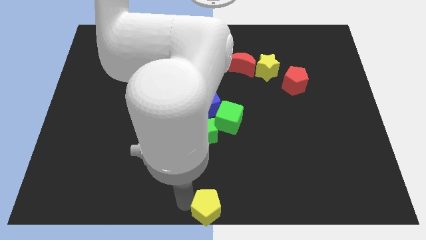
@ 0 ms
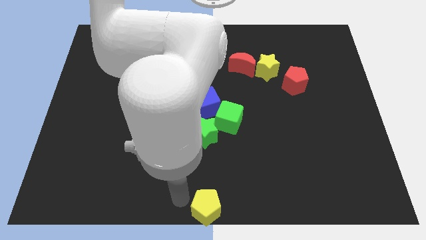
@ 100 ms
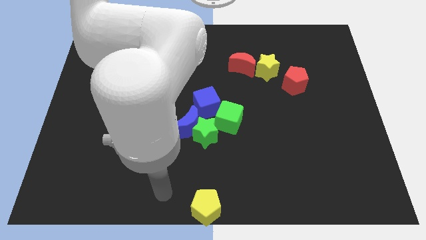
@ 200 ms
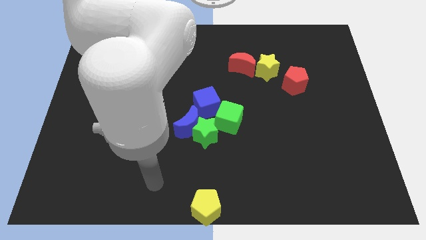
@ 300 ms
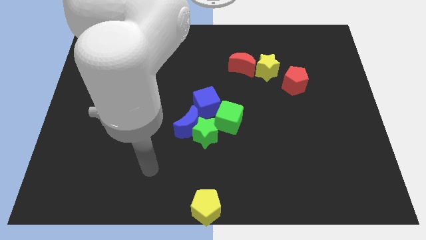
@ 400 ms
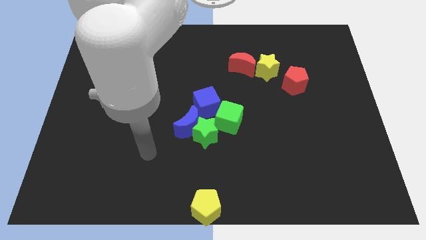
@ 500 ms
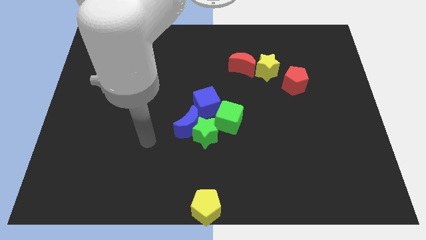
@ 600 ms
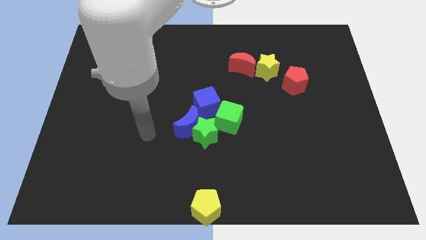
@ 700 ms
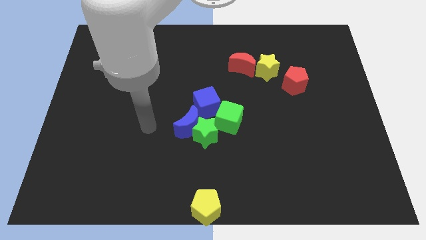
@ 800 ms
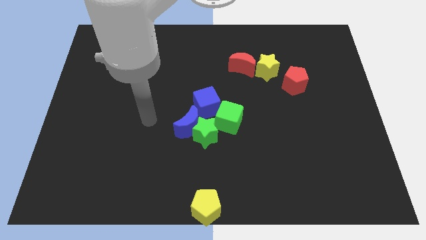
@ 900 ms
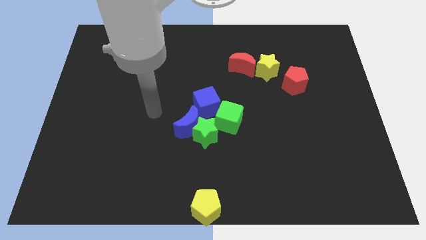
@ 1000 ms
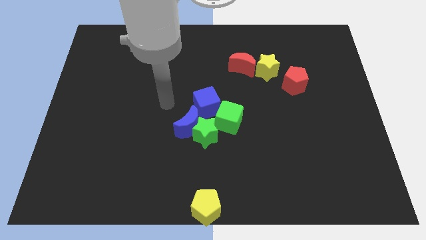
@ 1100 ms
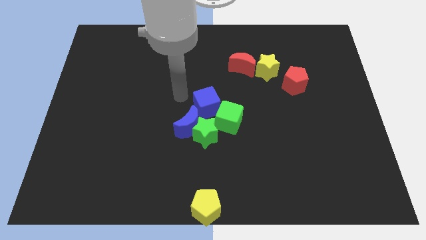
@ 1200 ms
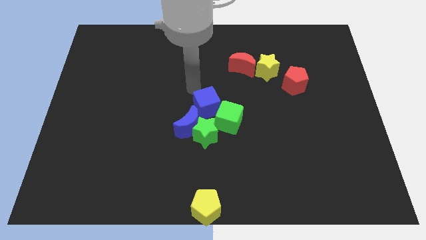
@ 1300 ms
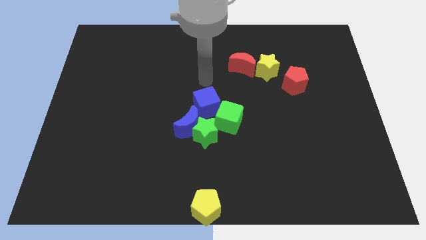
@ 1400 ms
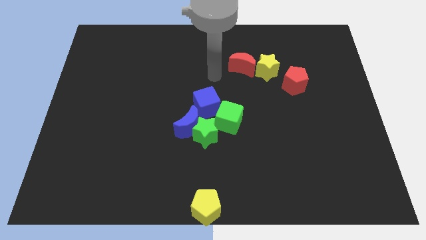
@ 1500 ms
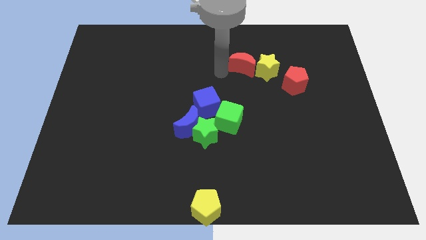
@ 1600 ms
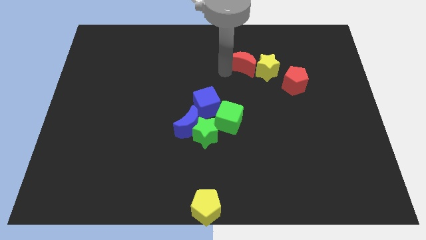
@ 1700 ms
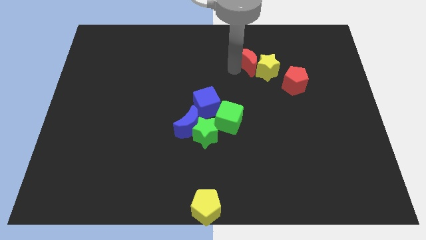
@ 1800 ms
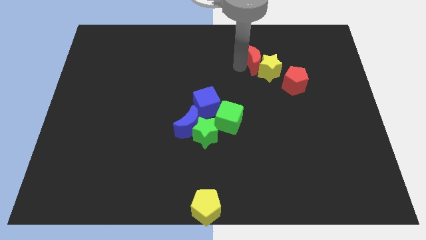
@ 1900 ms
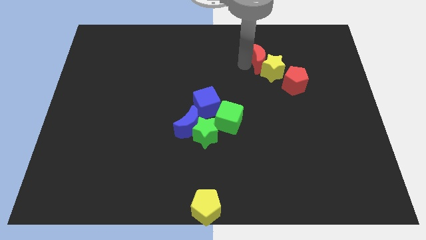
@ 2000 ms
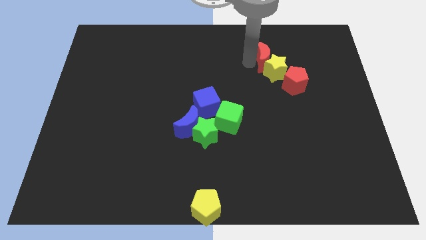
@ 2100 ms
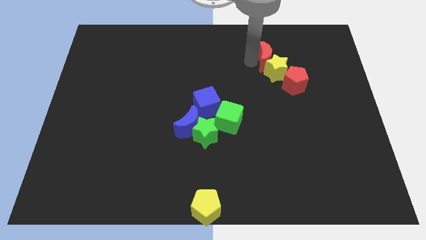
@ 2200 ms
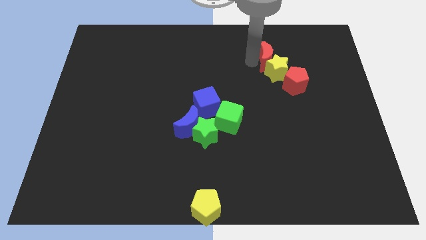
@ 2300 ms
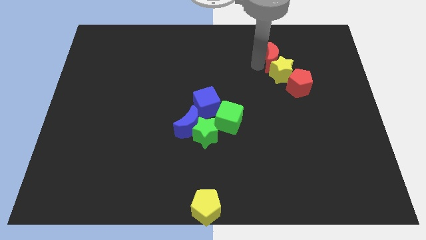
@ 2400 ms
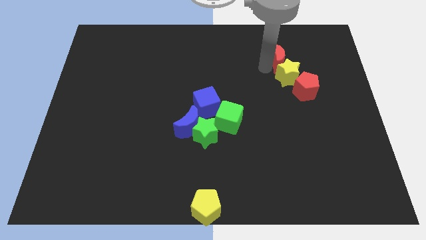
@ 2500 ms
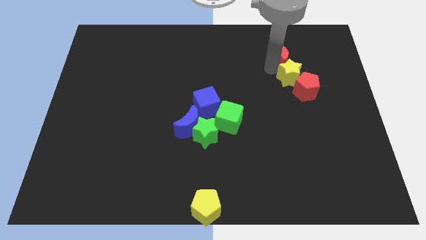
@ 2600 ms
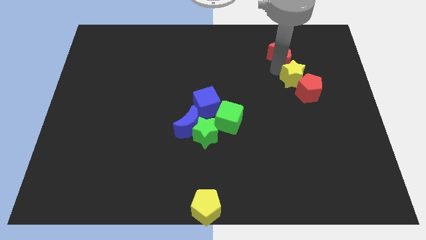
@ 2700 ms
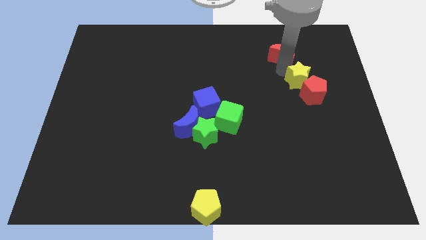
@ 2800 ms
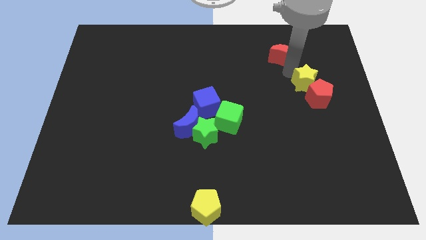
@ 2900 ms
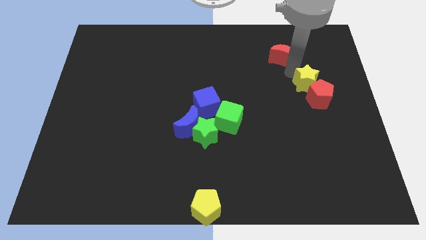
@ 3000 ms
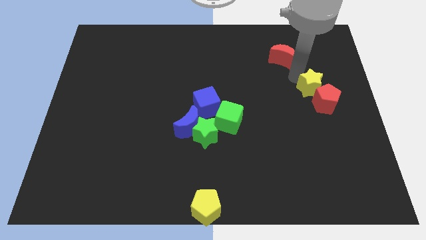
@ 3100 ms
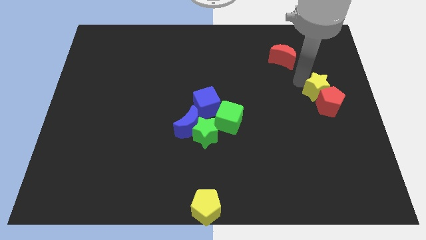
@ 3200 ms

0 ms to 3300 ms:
move your arm away from the yellow pentagon

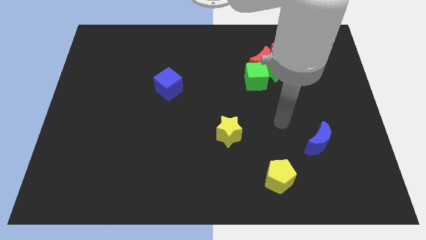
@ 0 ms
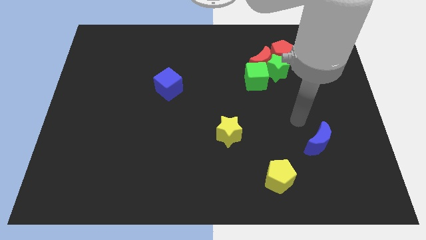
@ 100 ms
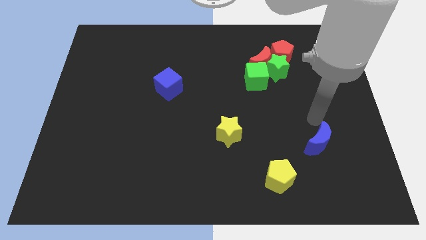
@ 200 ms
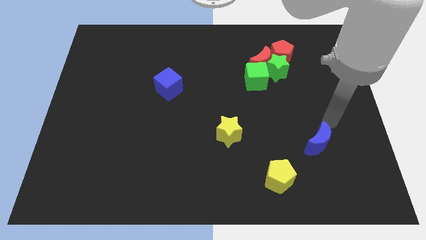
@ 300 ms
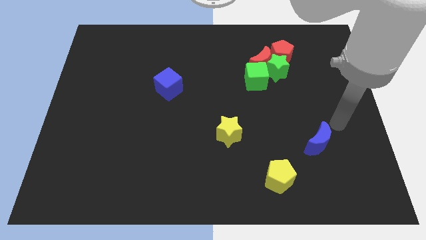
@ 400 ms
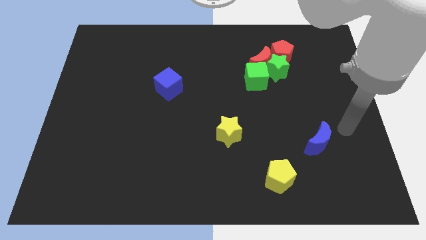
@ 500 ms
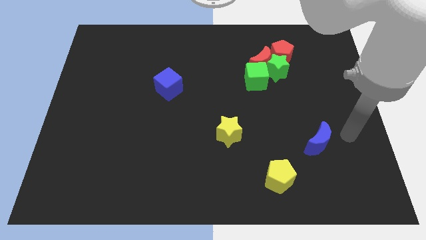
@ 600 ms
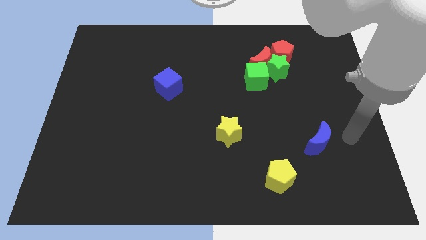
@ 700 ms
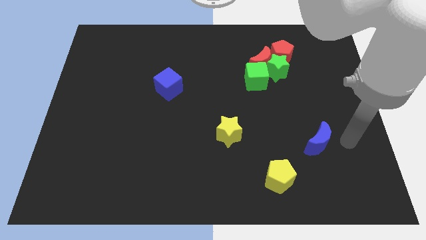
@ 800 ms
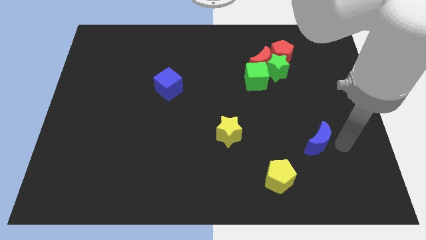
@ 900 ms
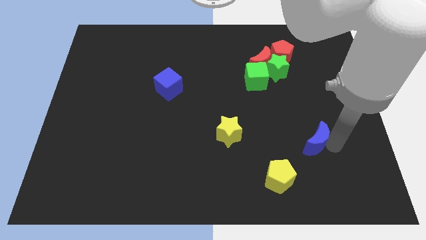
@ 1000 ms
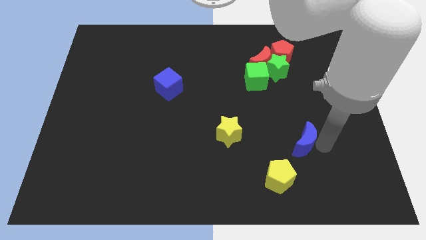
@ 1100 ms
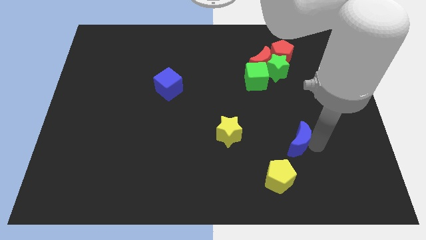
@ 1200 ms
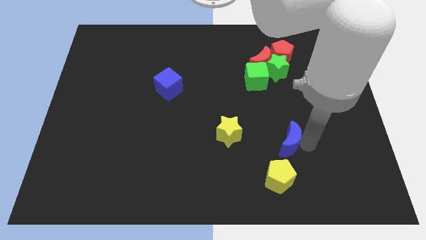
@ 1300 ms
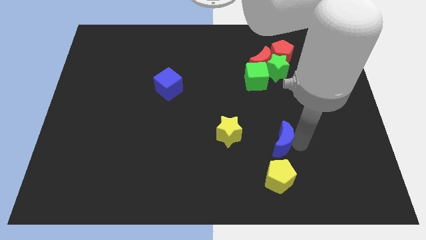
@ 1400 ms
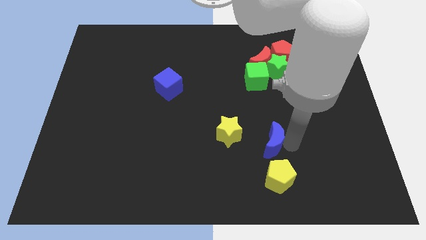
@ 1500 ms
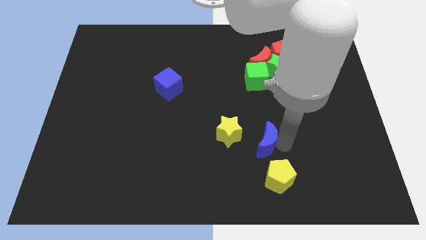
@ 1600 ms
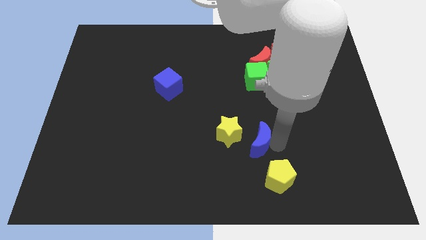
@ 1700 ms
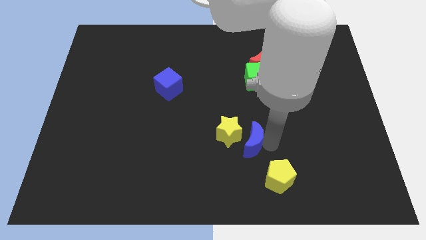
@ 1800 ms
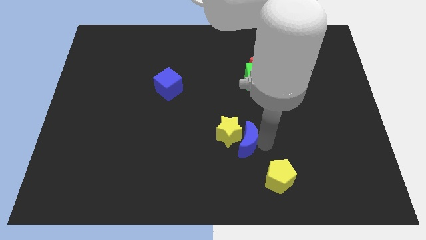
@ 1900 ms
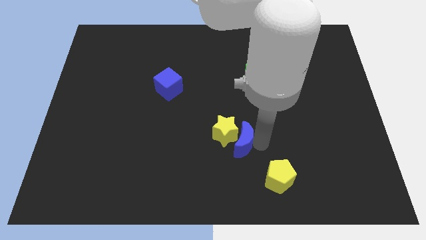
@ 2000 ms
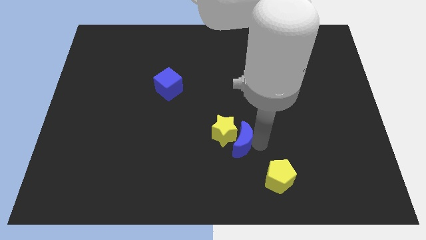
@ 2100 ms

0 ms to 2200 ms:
move blue moon into yellow star

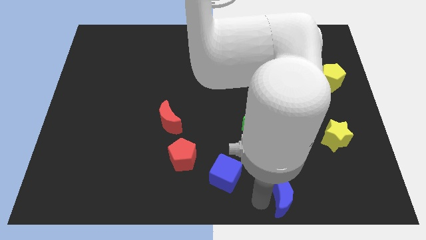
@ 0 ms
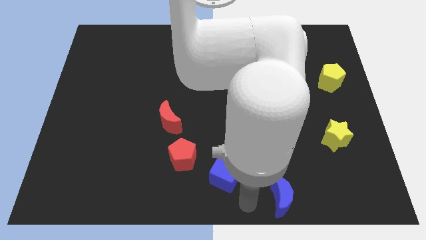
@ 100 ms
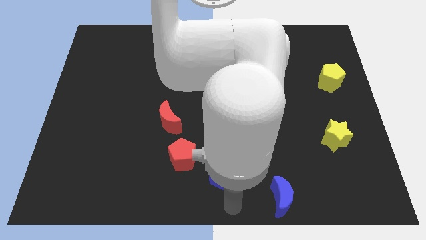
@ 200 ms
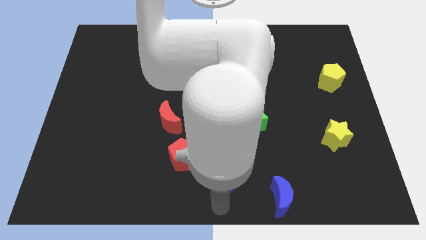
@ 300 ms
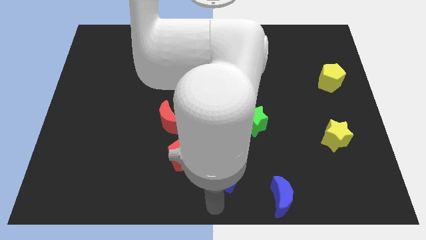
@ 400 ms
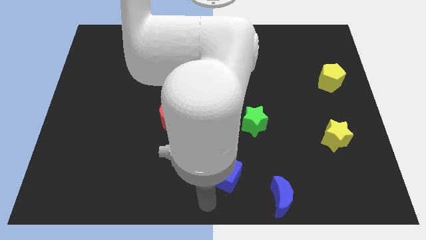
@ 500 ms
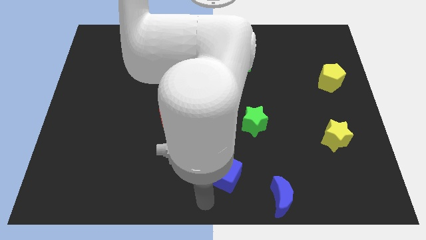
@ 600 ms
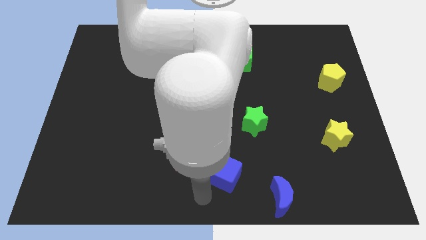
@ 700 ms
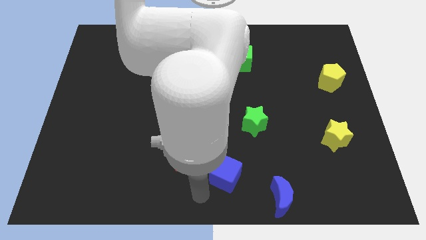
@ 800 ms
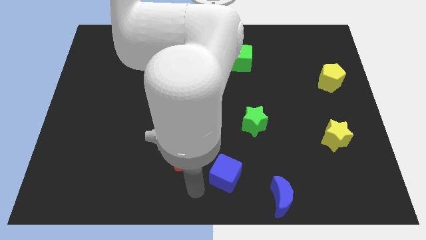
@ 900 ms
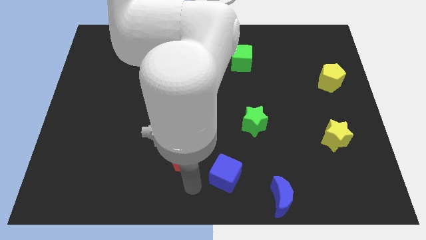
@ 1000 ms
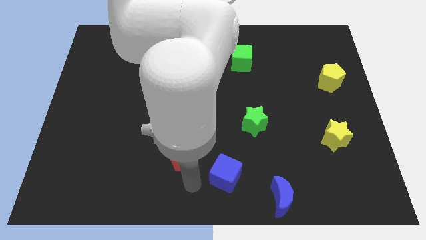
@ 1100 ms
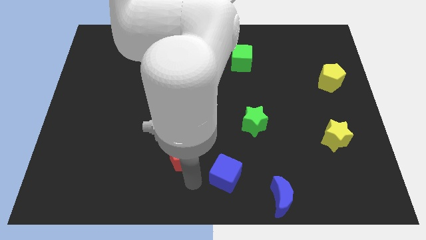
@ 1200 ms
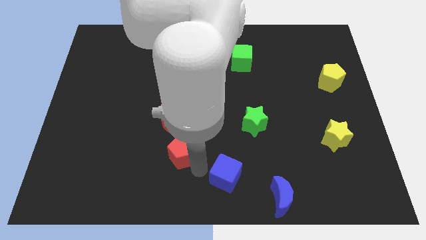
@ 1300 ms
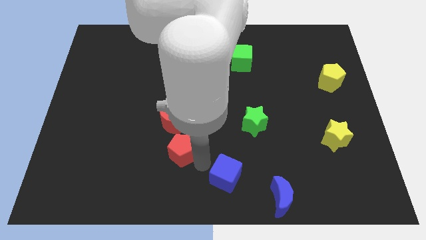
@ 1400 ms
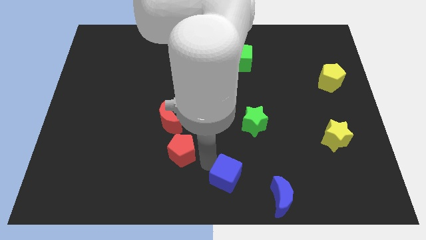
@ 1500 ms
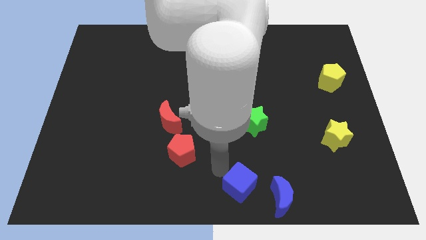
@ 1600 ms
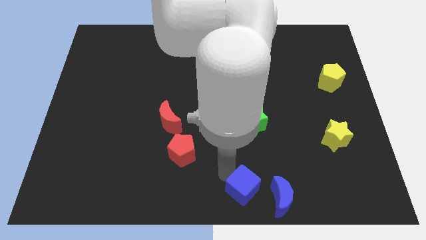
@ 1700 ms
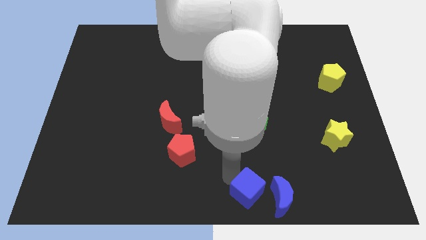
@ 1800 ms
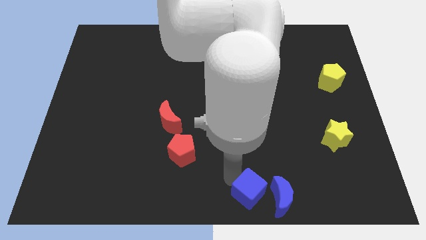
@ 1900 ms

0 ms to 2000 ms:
push the blue cube towards blue moon

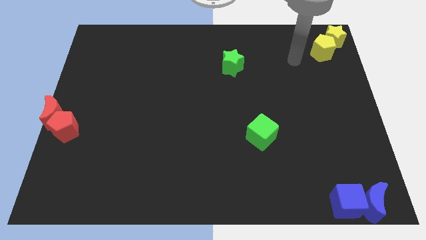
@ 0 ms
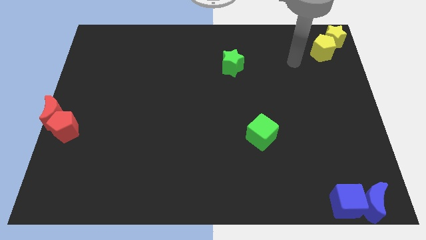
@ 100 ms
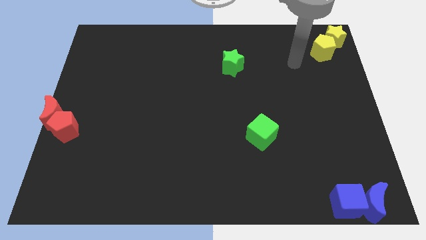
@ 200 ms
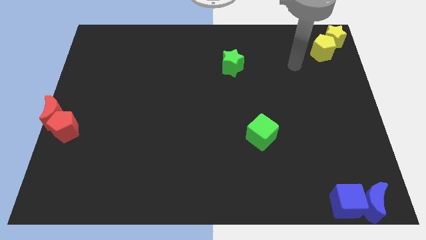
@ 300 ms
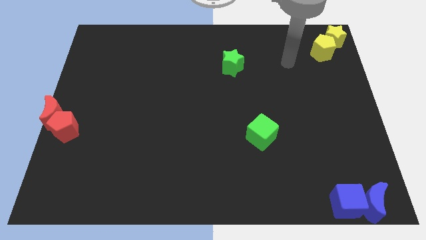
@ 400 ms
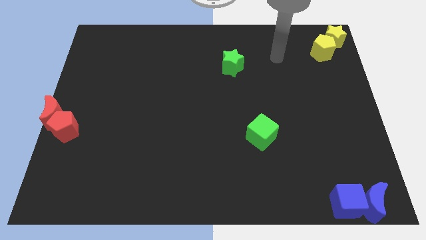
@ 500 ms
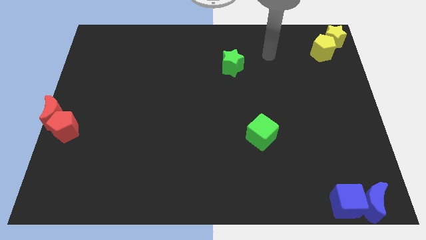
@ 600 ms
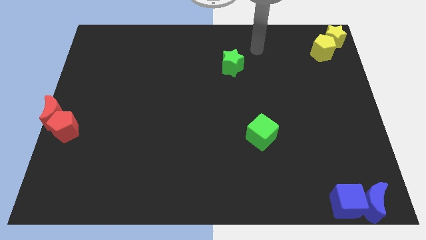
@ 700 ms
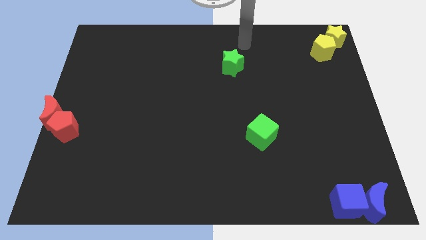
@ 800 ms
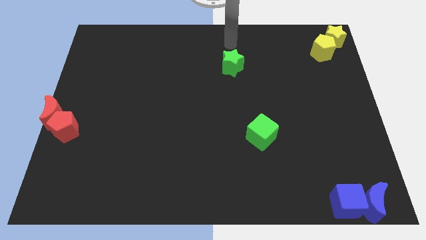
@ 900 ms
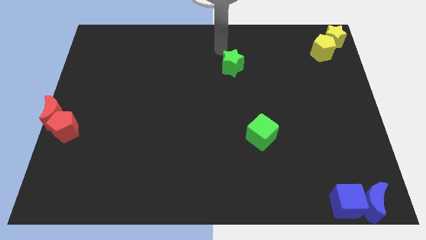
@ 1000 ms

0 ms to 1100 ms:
slightly move the green star to the down

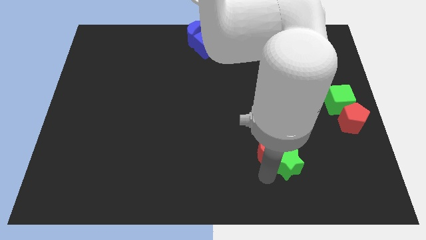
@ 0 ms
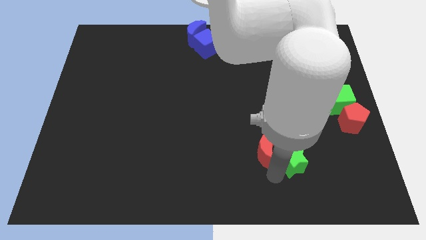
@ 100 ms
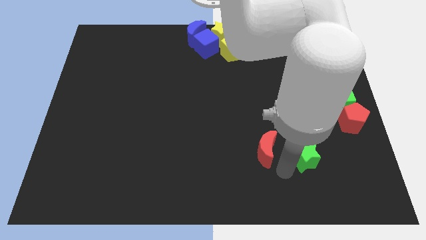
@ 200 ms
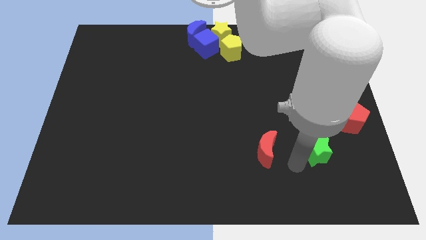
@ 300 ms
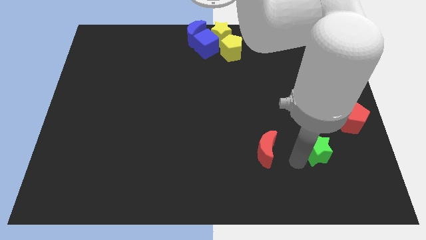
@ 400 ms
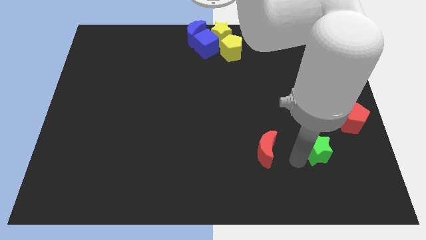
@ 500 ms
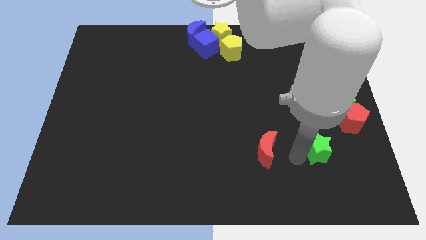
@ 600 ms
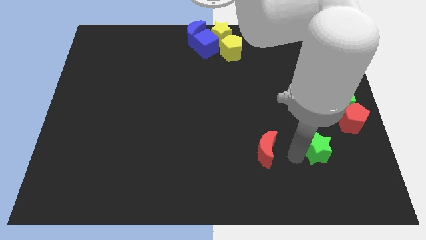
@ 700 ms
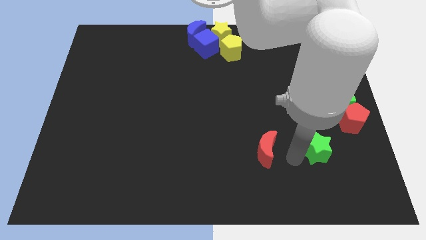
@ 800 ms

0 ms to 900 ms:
push green star slightly up
